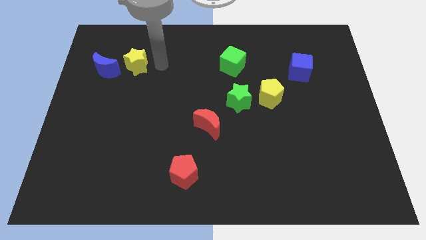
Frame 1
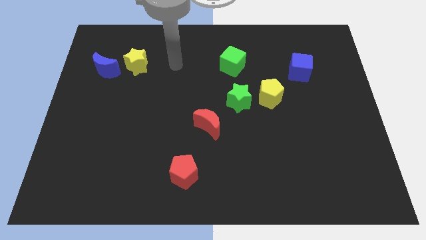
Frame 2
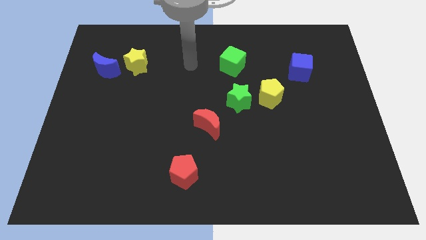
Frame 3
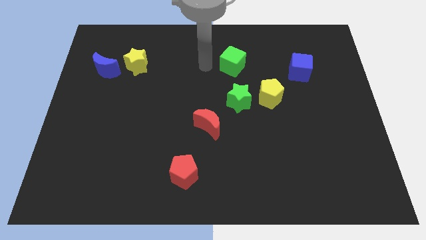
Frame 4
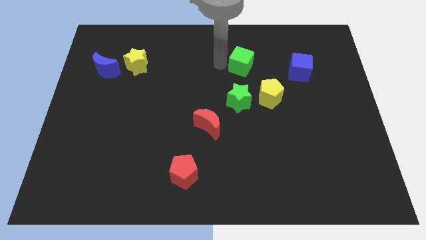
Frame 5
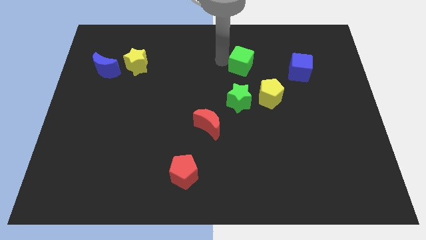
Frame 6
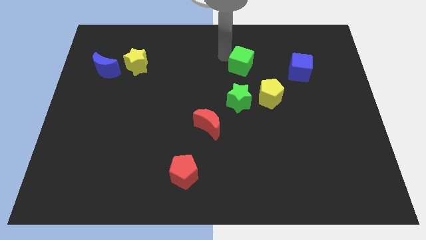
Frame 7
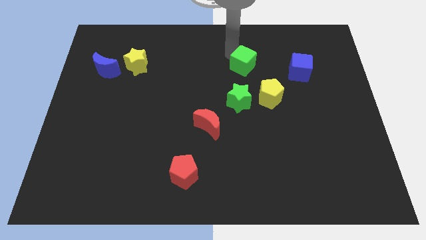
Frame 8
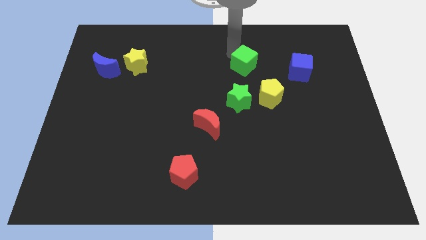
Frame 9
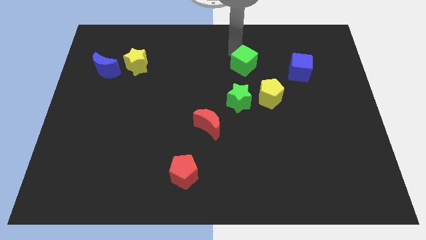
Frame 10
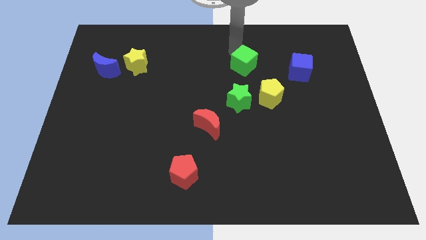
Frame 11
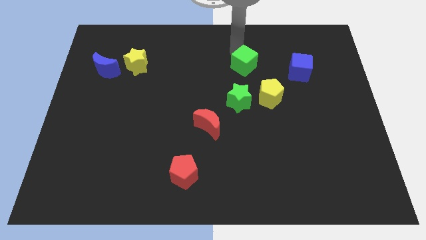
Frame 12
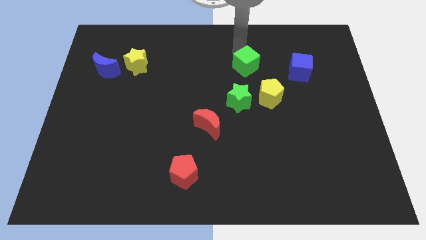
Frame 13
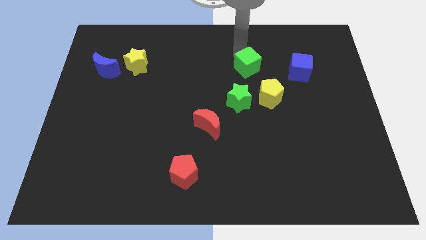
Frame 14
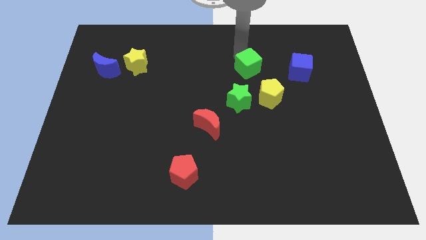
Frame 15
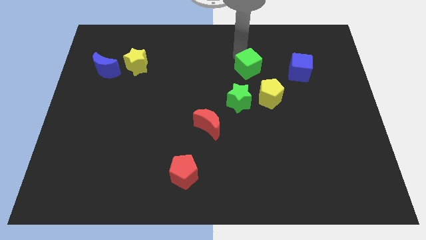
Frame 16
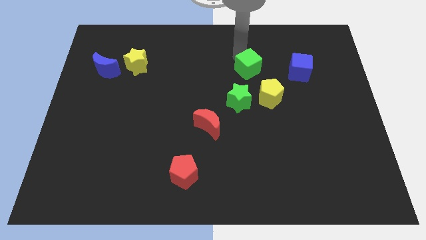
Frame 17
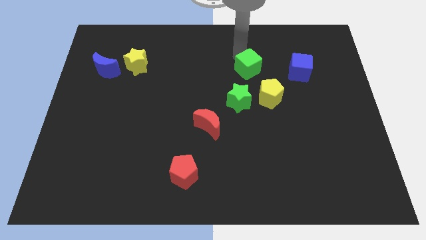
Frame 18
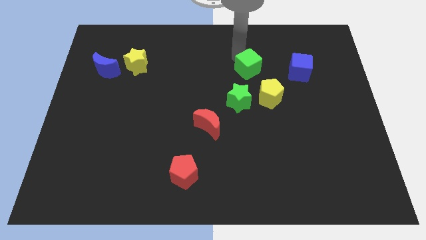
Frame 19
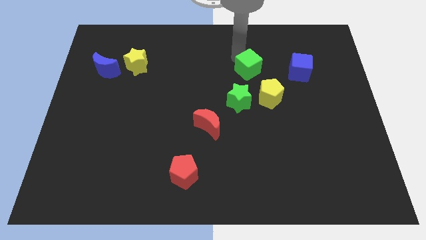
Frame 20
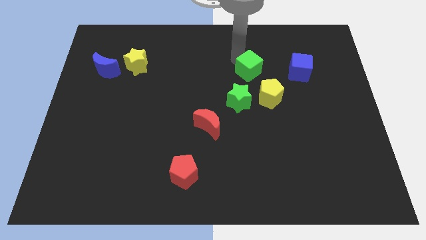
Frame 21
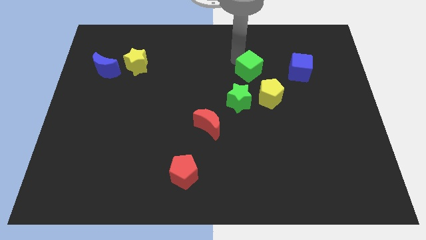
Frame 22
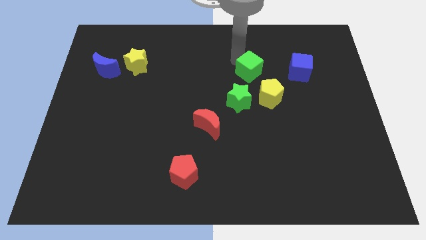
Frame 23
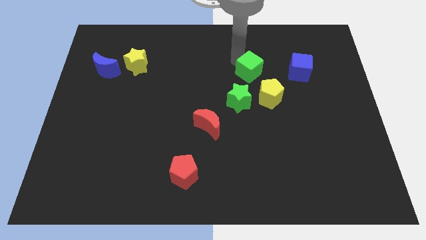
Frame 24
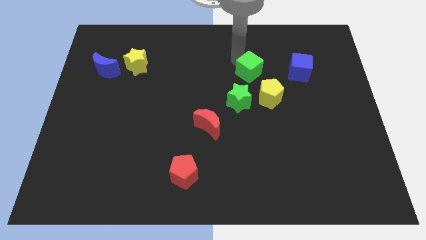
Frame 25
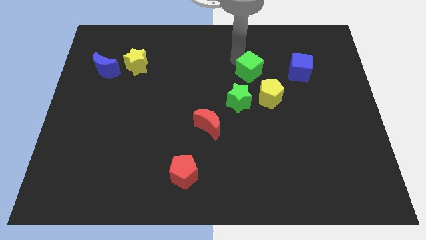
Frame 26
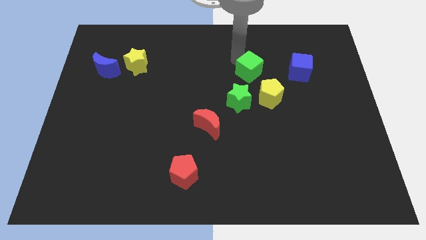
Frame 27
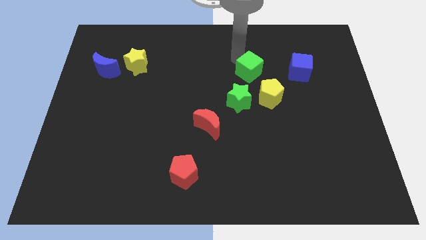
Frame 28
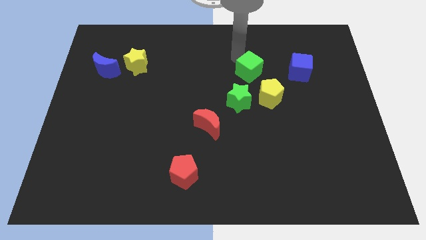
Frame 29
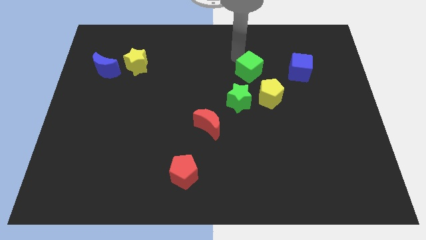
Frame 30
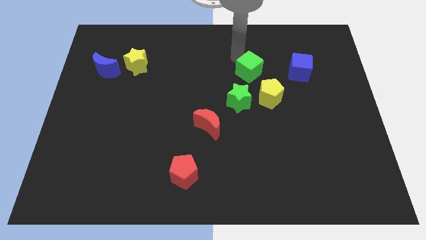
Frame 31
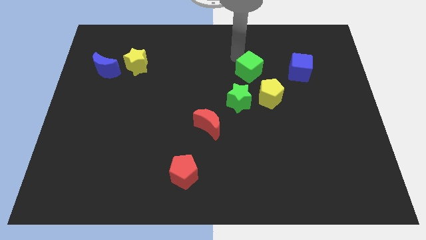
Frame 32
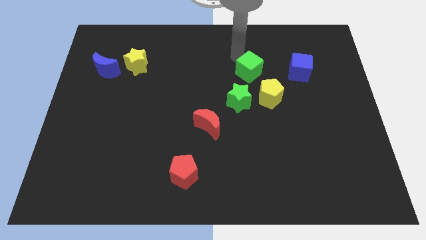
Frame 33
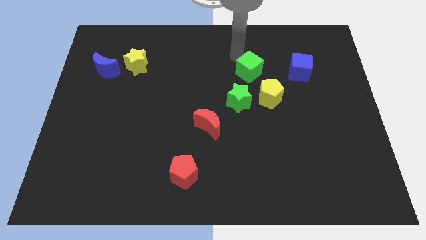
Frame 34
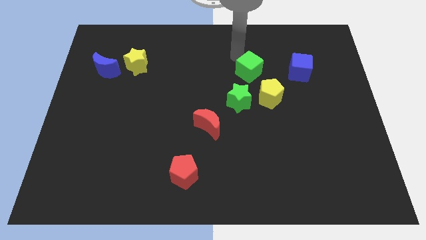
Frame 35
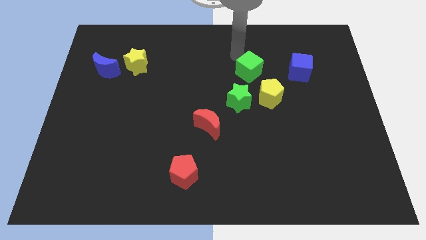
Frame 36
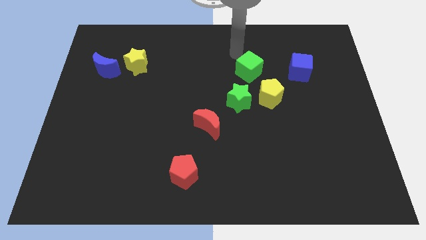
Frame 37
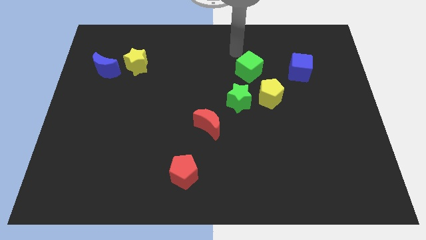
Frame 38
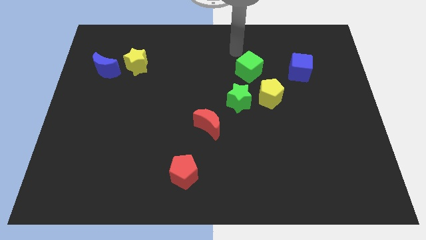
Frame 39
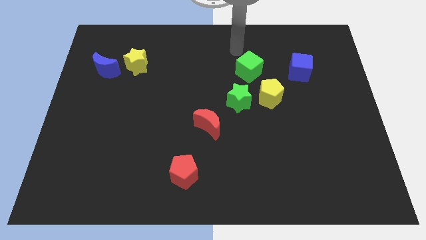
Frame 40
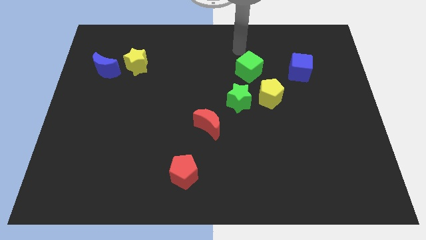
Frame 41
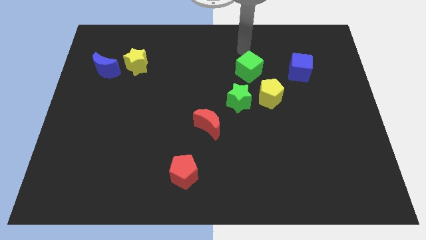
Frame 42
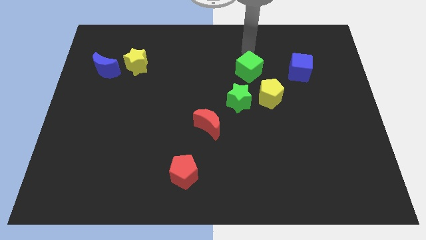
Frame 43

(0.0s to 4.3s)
slightly move green cube towards the green star

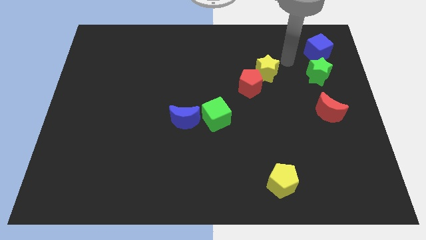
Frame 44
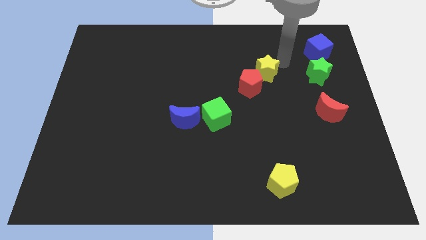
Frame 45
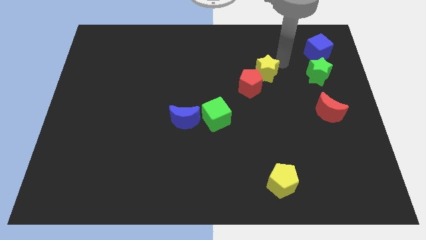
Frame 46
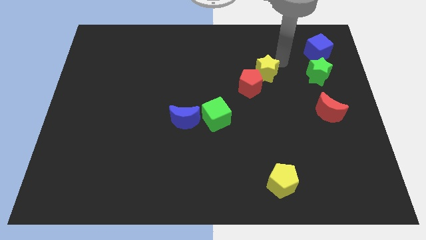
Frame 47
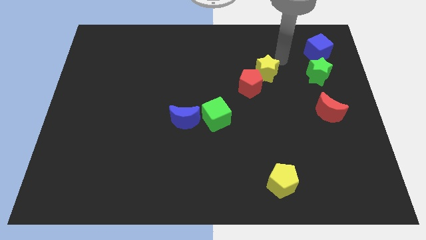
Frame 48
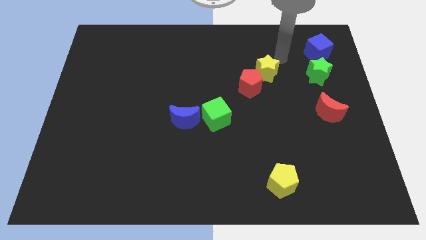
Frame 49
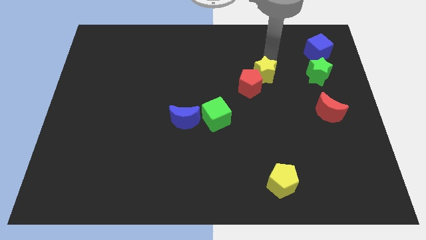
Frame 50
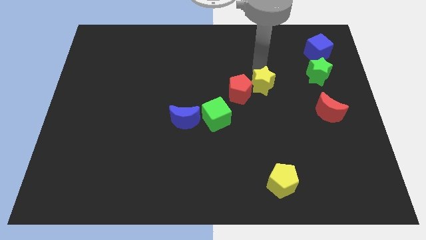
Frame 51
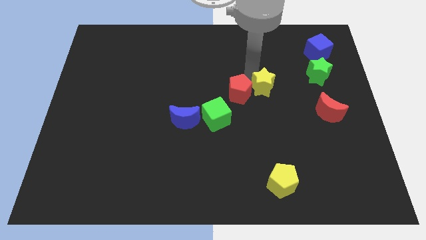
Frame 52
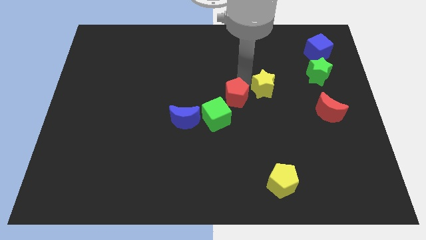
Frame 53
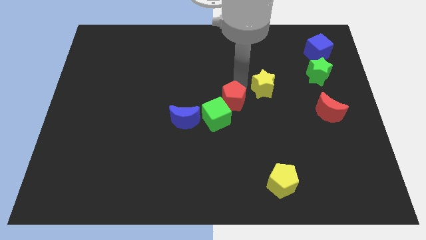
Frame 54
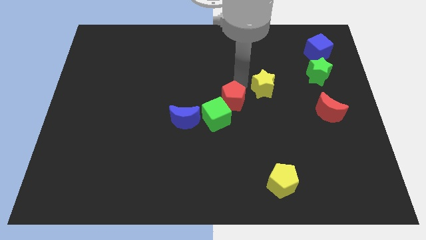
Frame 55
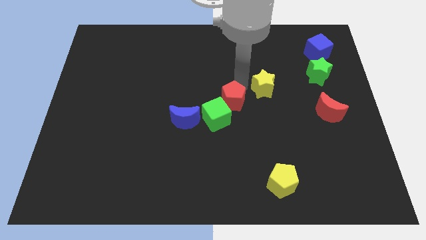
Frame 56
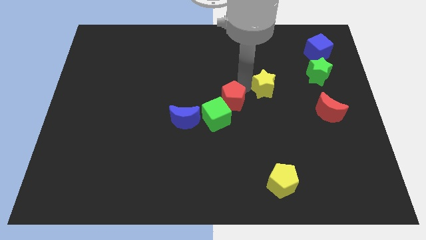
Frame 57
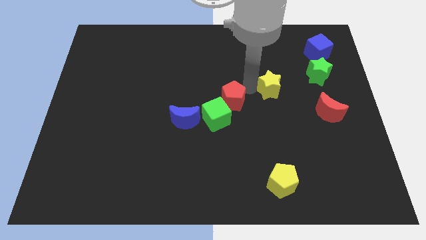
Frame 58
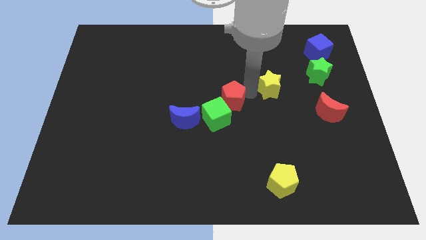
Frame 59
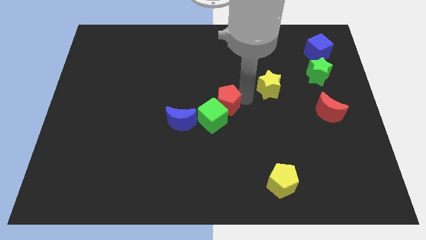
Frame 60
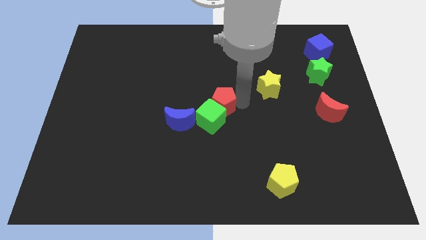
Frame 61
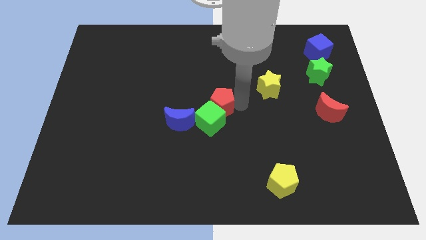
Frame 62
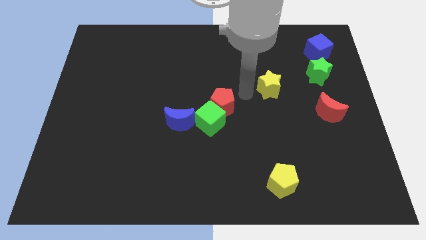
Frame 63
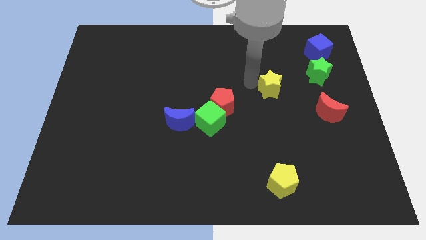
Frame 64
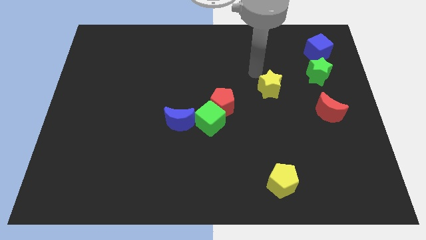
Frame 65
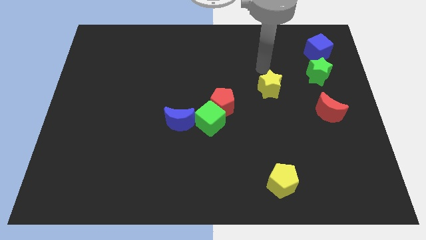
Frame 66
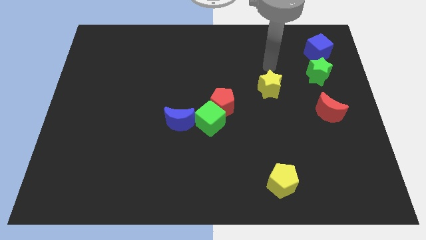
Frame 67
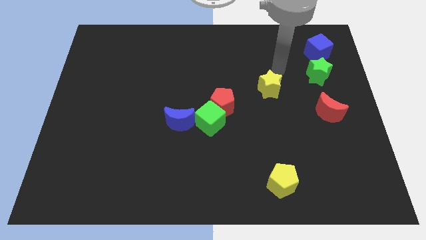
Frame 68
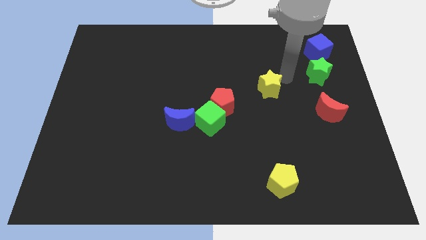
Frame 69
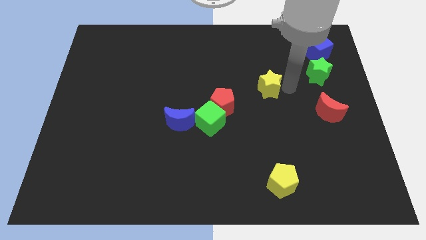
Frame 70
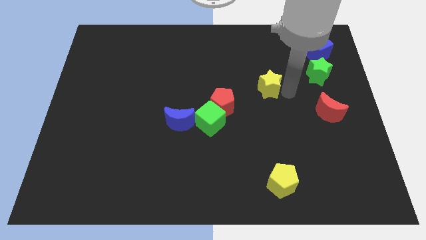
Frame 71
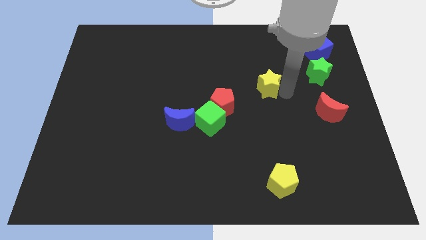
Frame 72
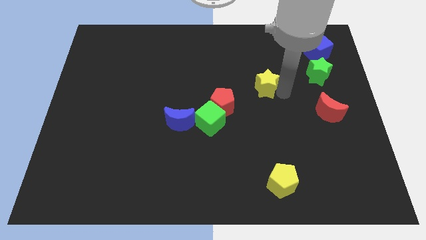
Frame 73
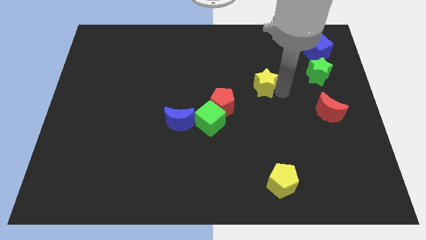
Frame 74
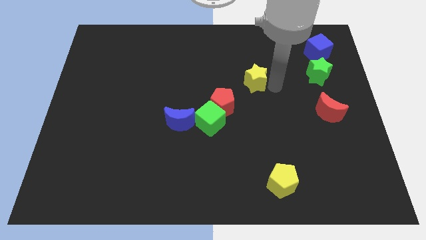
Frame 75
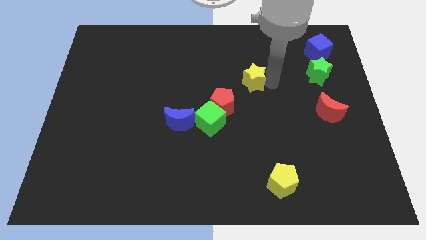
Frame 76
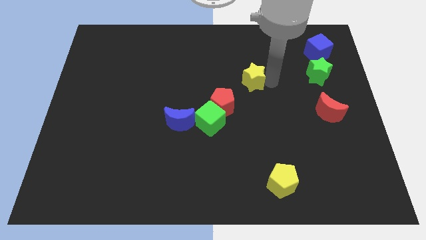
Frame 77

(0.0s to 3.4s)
push the red pentagon into the green cube

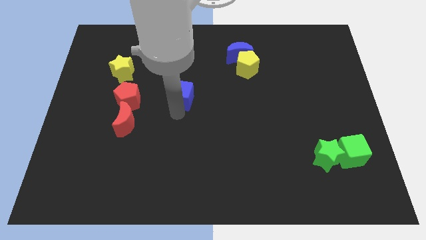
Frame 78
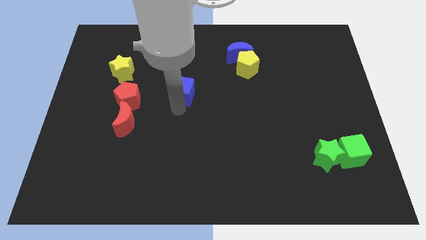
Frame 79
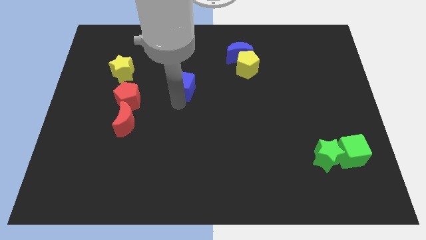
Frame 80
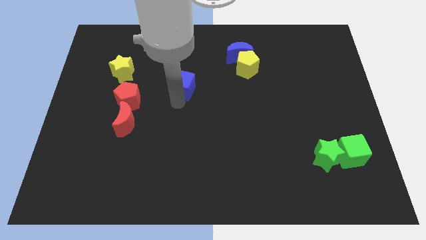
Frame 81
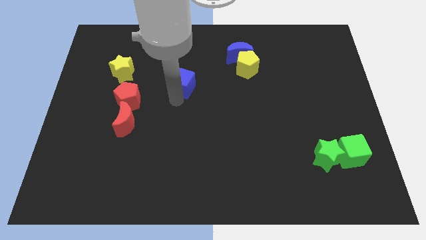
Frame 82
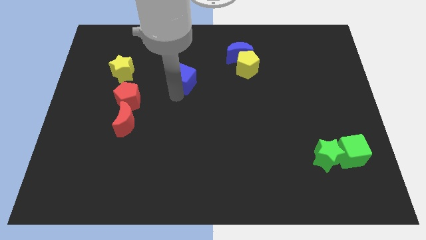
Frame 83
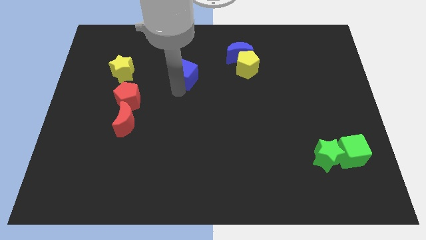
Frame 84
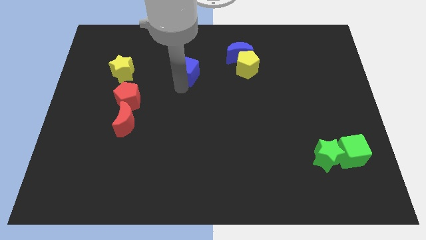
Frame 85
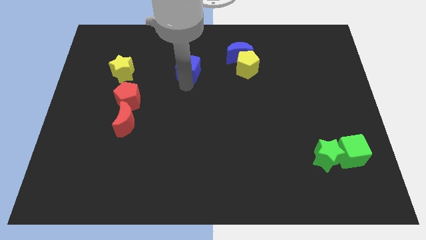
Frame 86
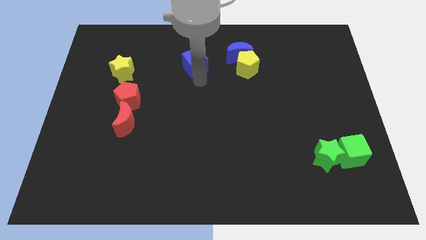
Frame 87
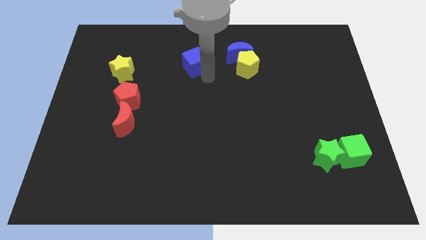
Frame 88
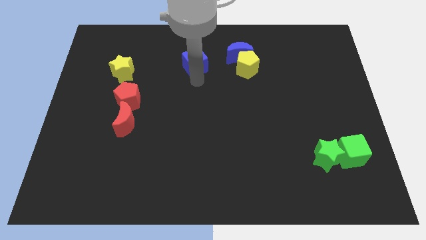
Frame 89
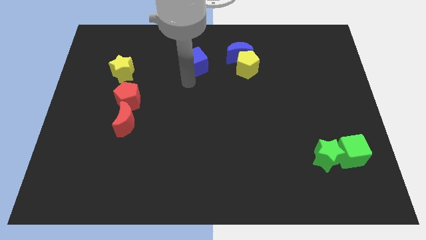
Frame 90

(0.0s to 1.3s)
move blue cube to the top center of the board
